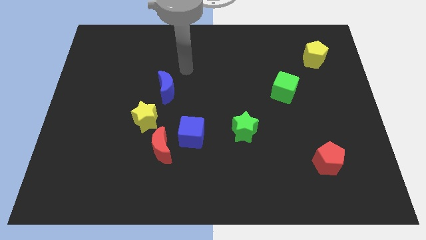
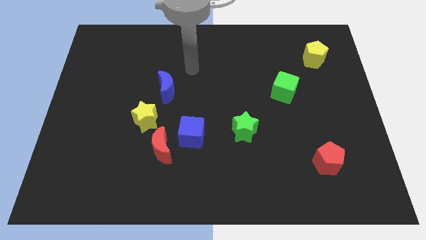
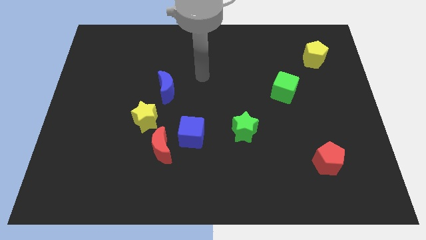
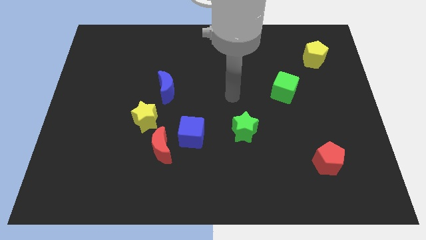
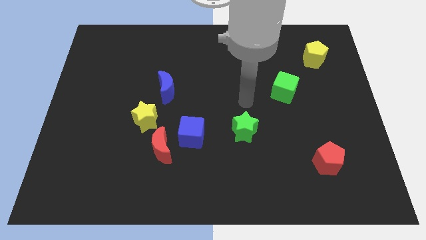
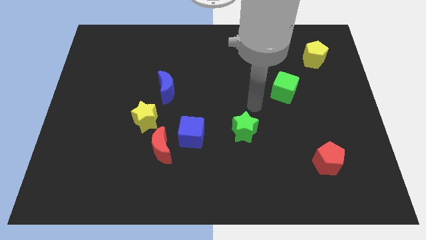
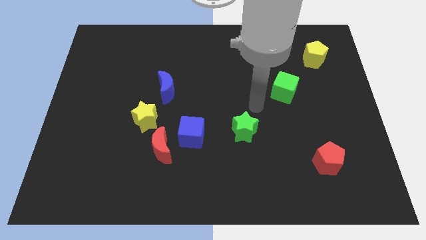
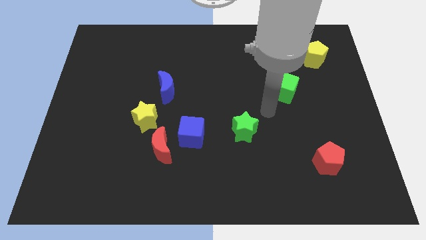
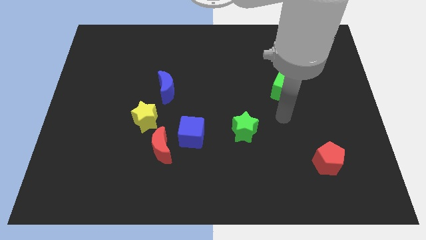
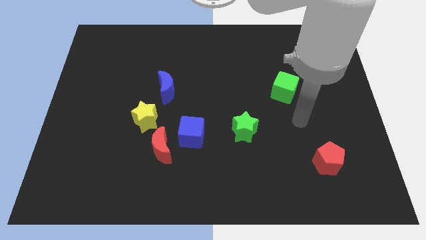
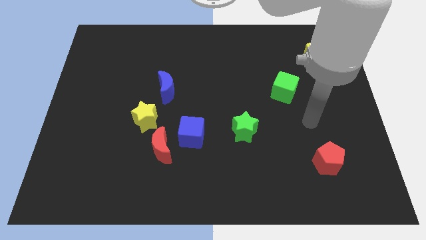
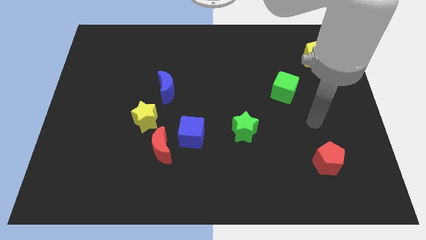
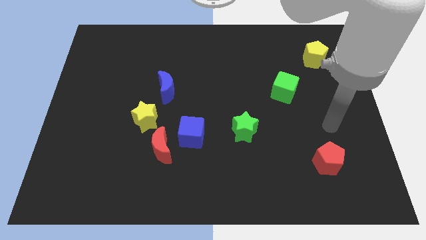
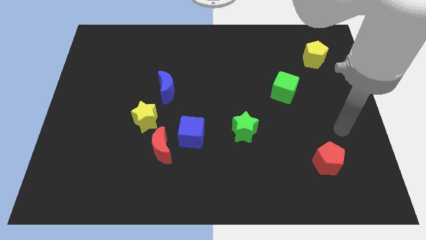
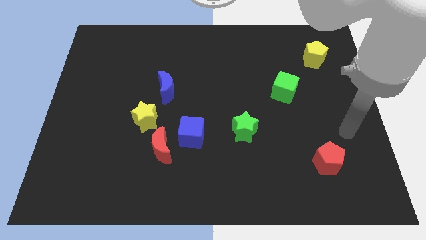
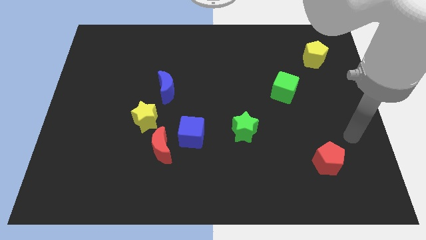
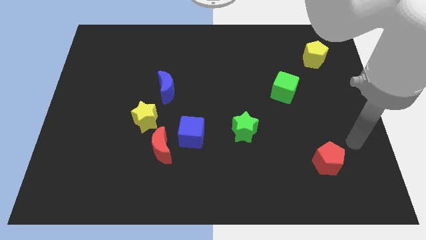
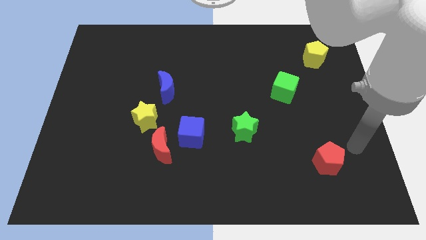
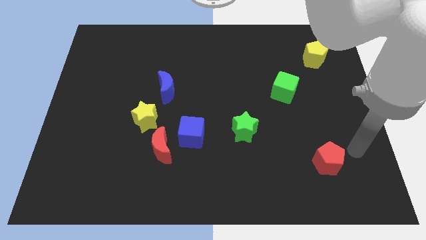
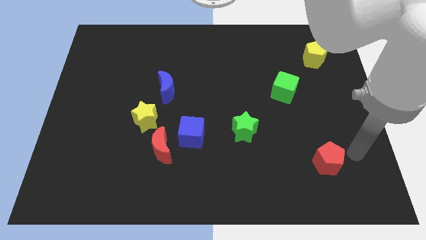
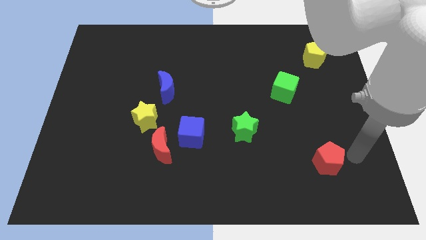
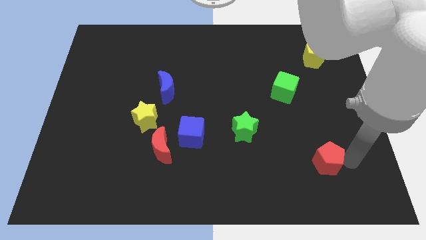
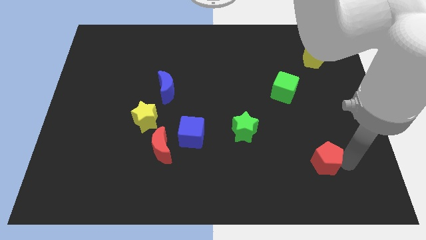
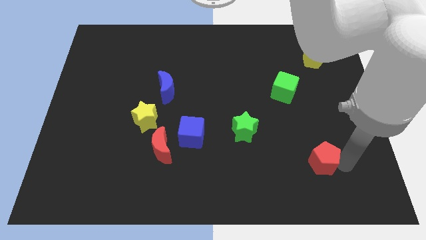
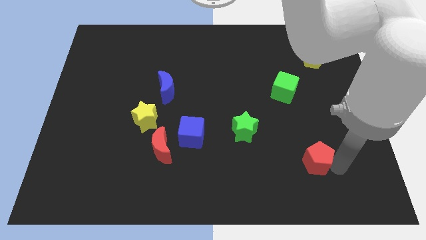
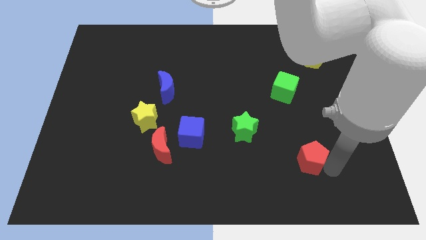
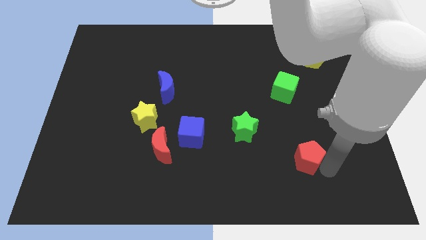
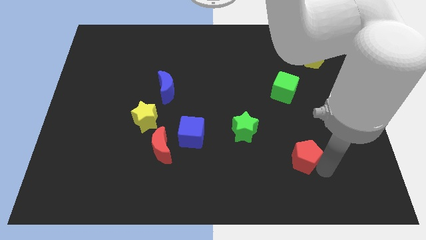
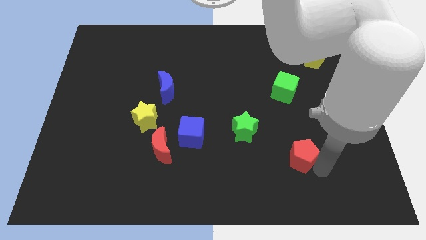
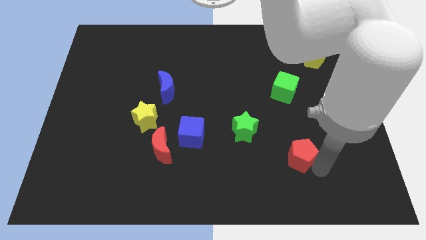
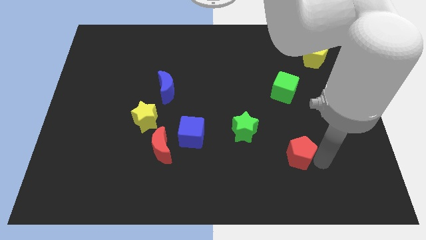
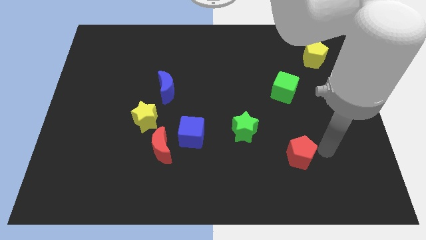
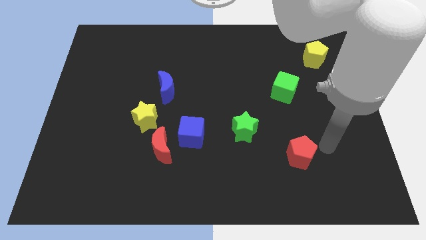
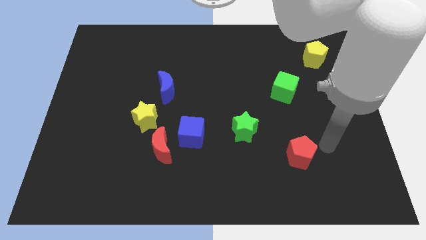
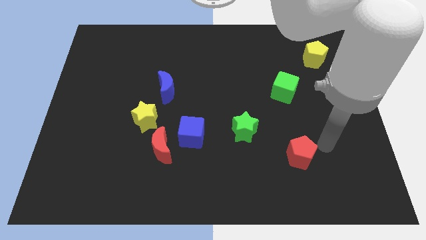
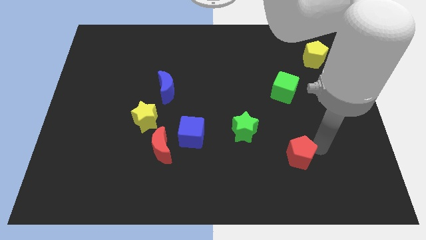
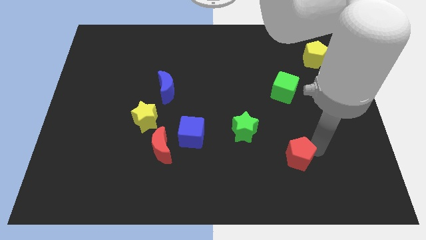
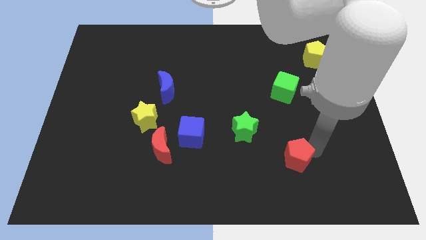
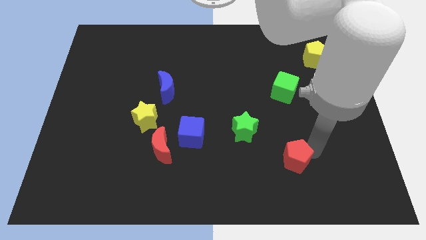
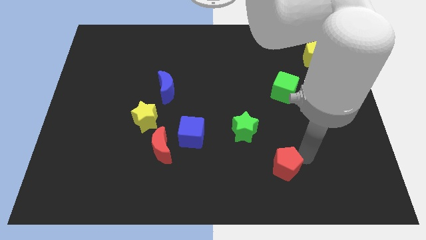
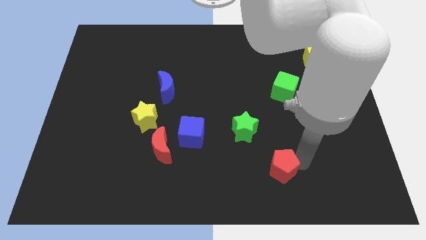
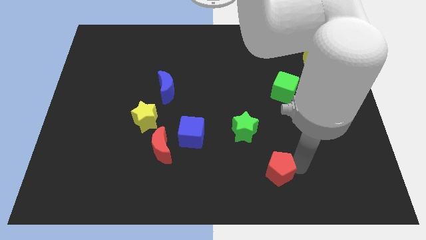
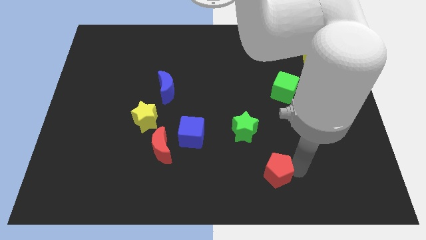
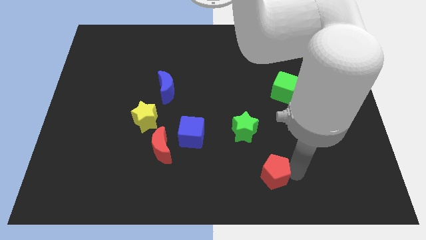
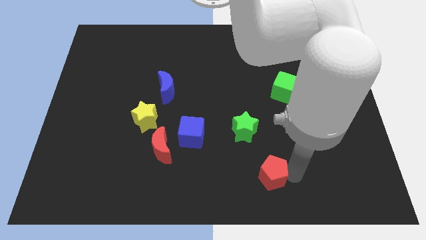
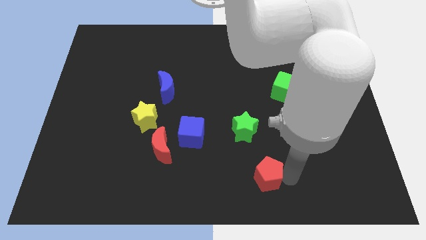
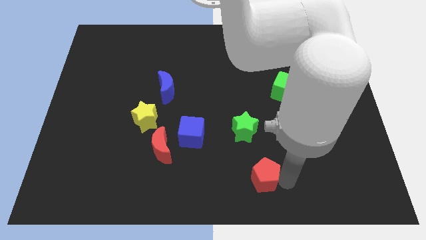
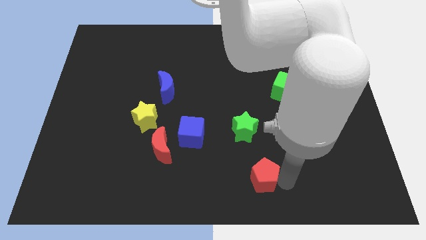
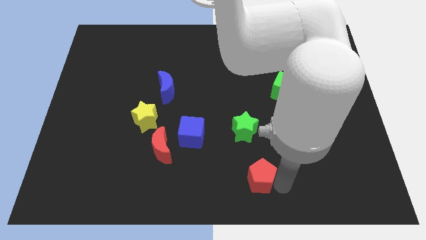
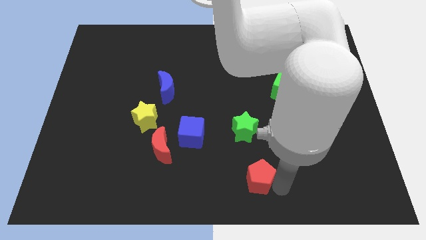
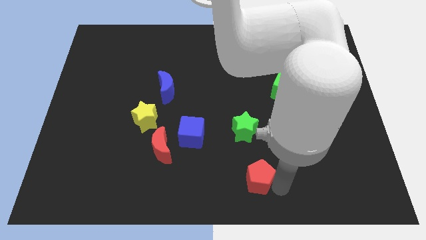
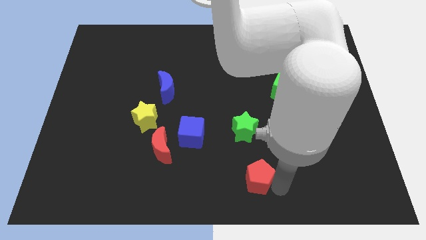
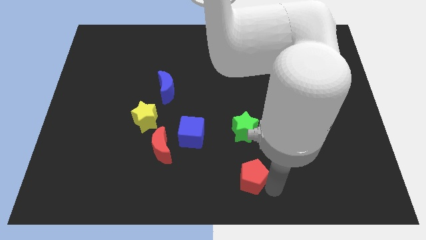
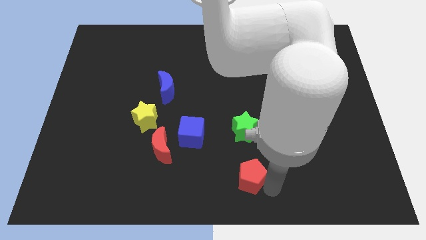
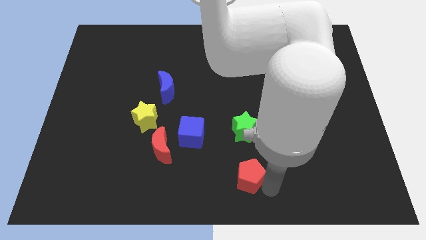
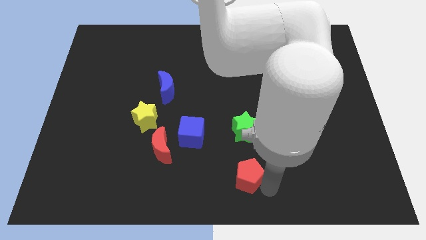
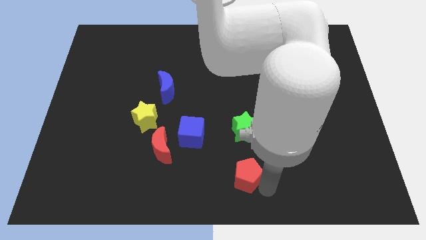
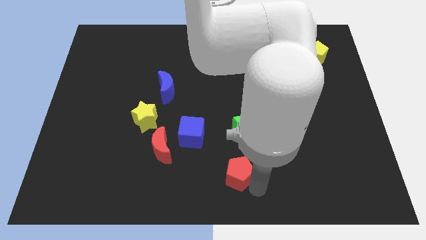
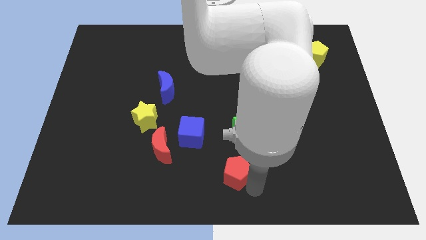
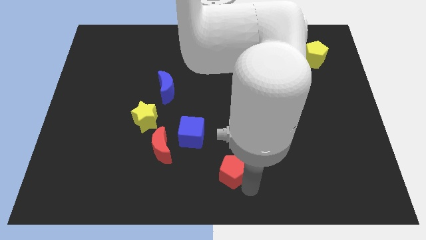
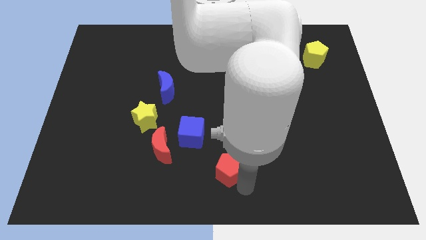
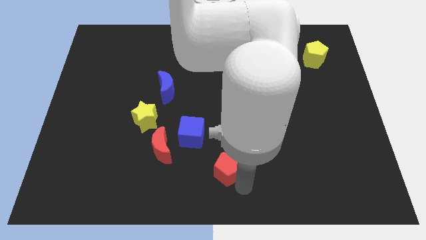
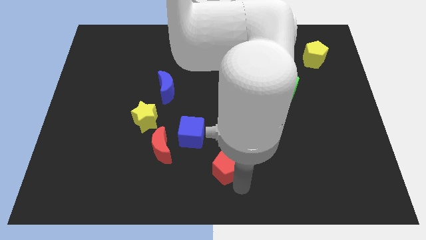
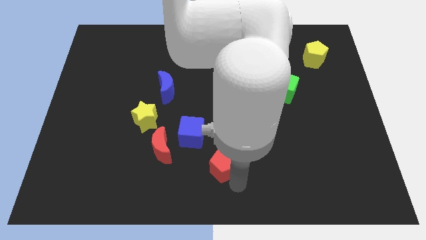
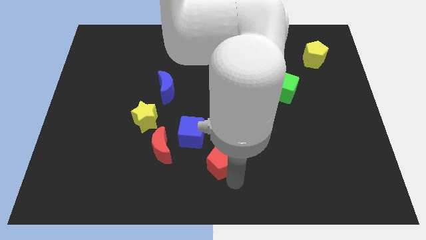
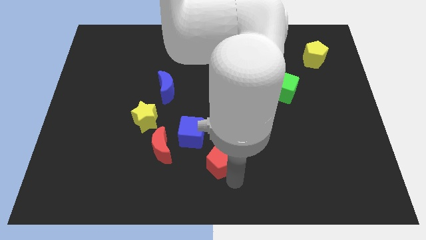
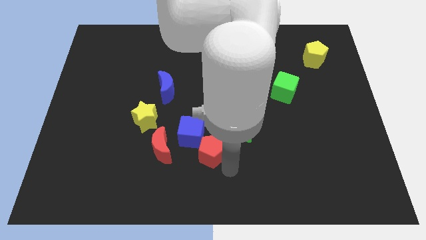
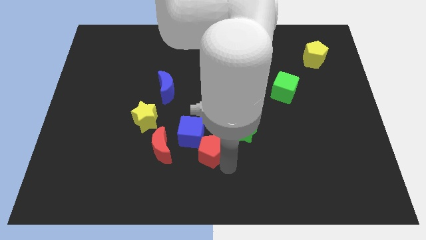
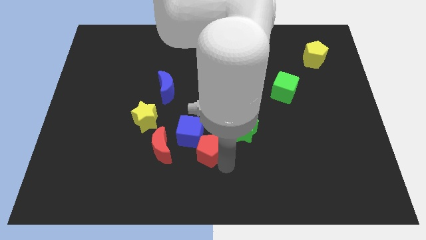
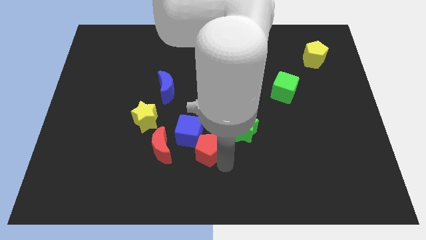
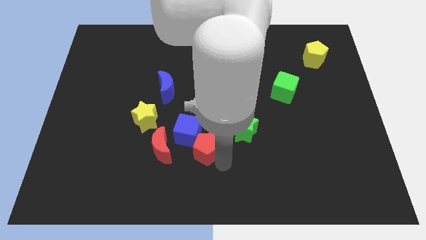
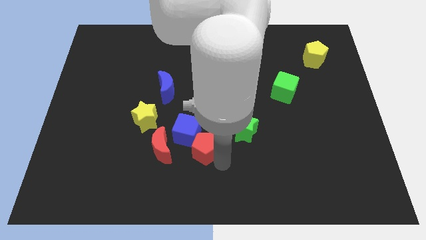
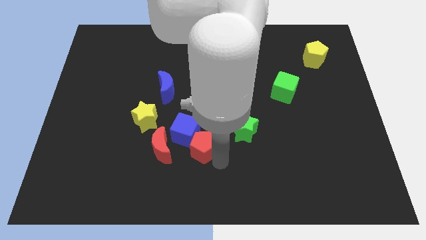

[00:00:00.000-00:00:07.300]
slide the red pentagon to the blue cube

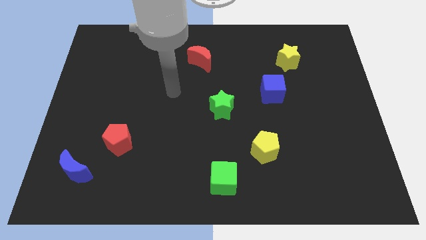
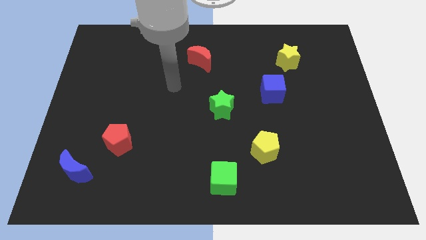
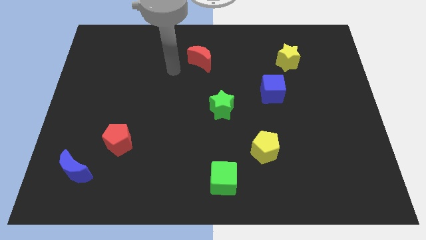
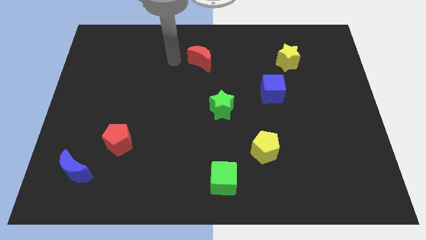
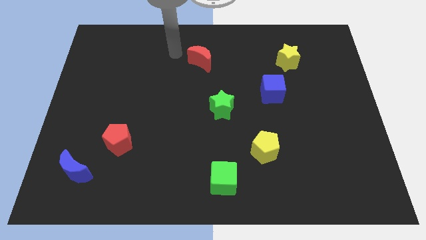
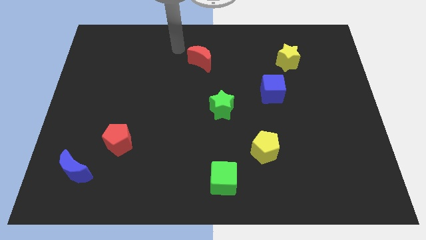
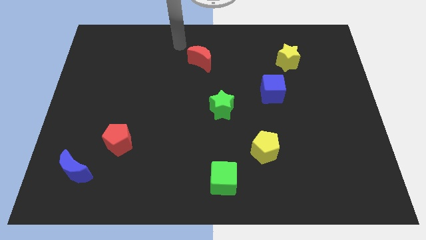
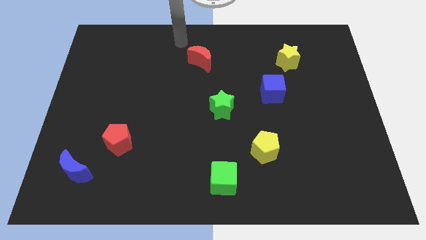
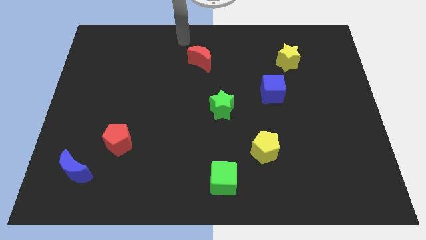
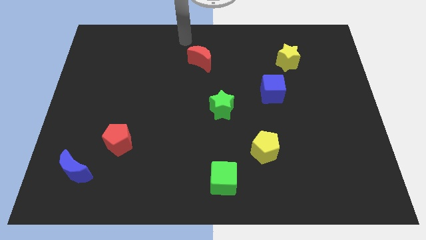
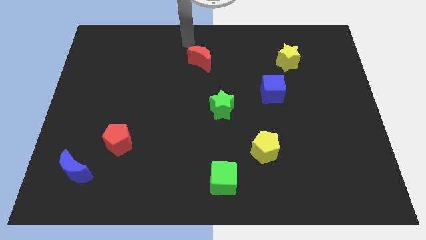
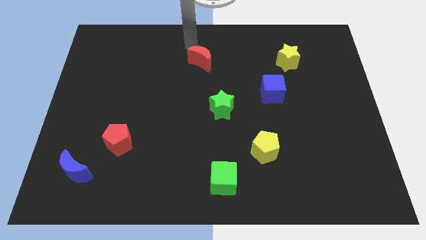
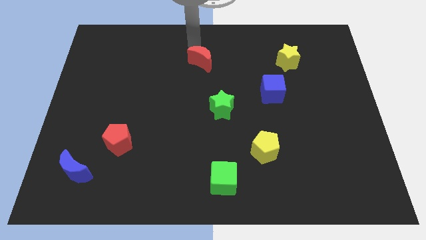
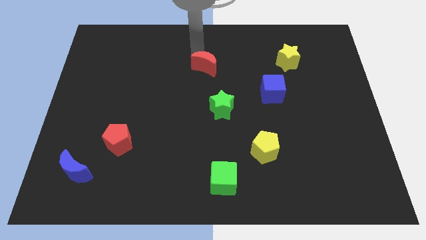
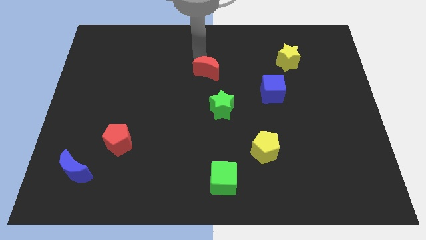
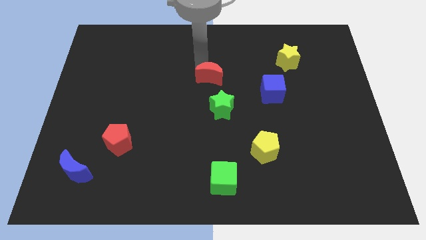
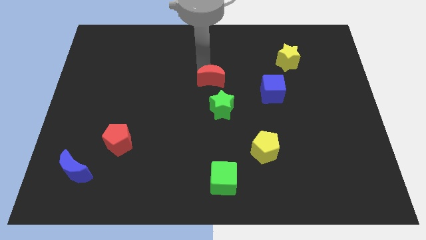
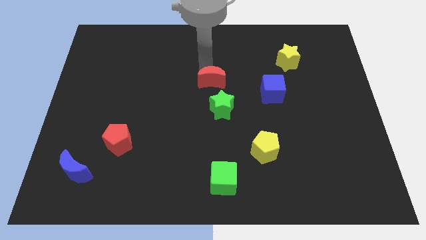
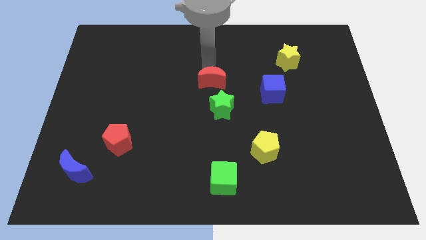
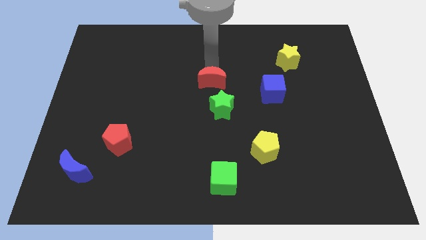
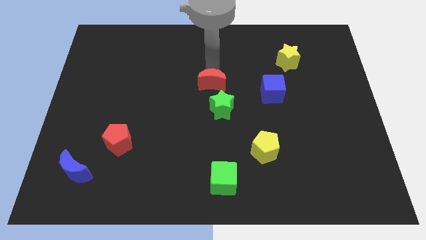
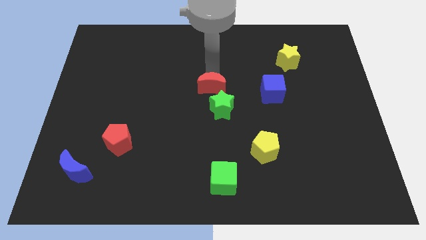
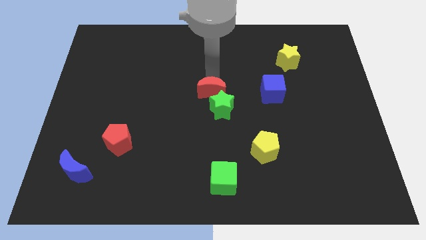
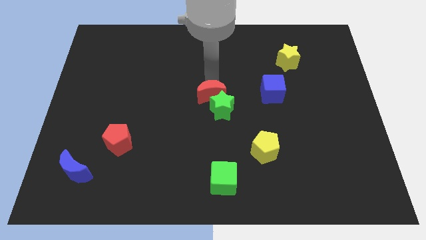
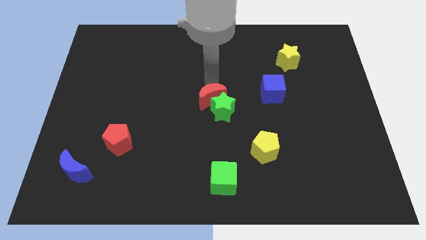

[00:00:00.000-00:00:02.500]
slide the red moon close to the green star
